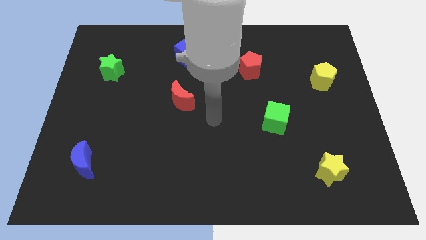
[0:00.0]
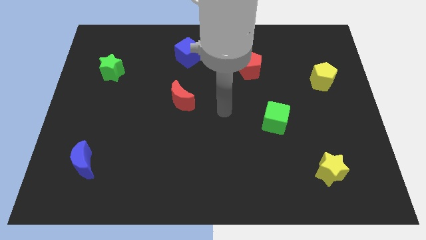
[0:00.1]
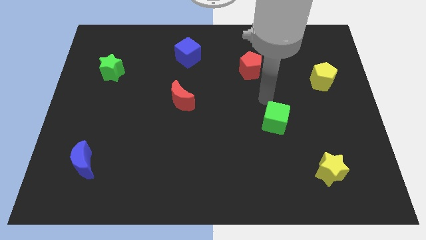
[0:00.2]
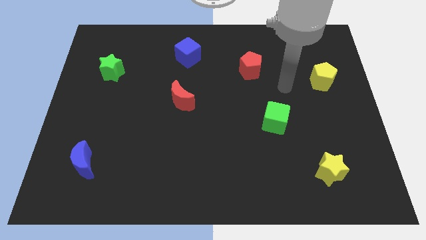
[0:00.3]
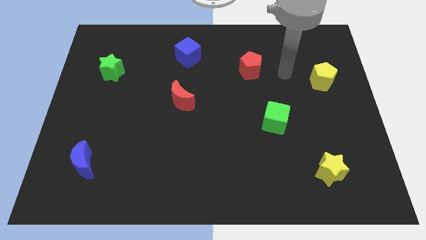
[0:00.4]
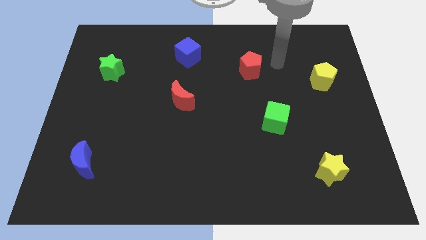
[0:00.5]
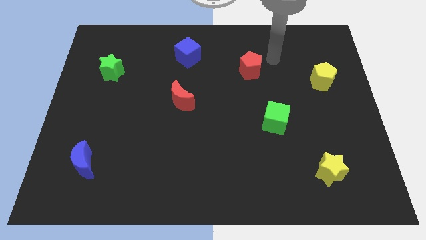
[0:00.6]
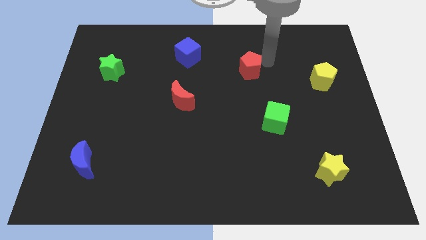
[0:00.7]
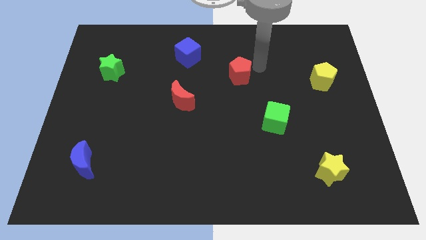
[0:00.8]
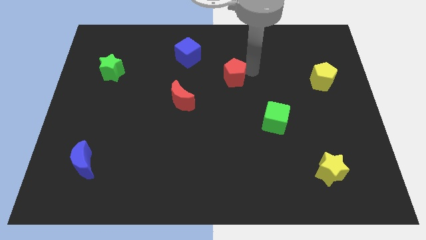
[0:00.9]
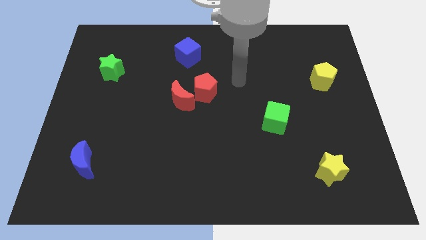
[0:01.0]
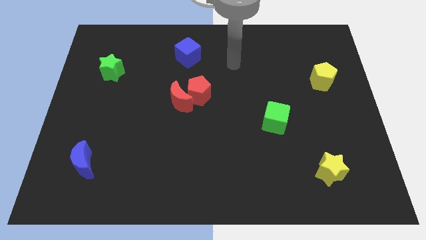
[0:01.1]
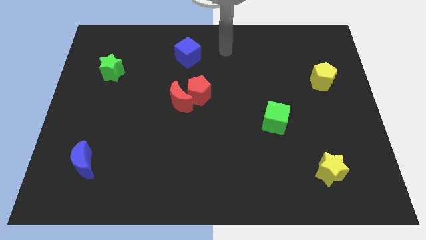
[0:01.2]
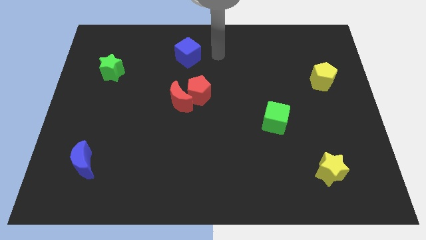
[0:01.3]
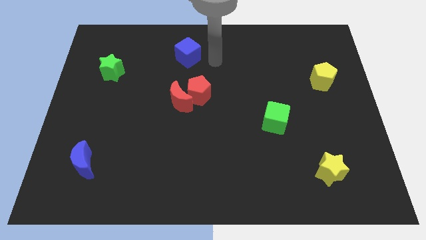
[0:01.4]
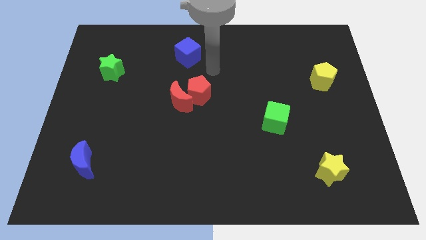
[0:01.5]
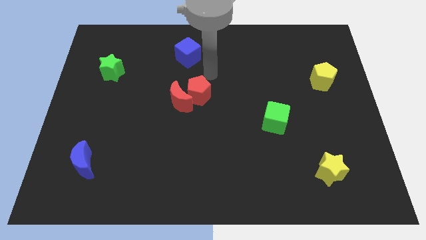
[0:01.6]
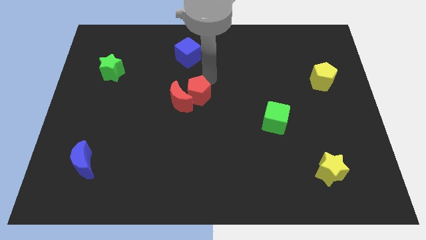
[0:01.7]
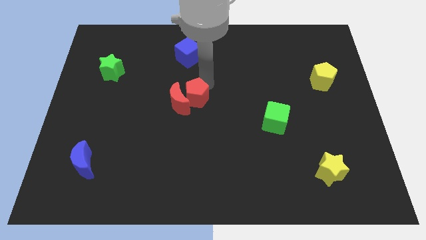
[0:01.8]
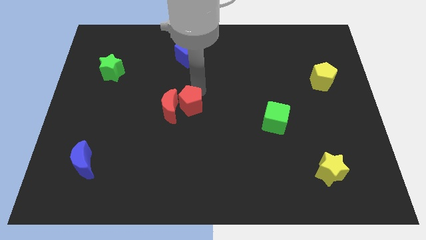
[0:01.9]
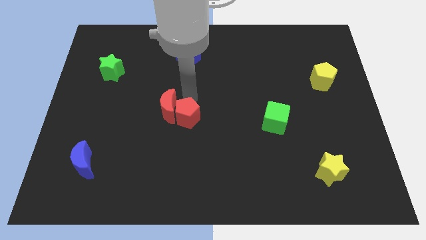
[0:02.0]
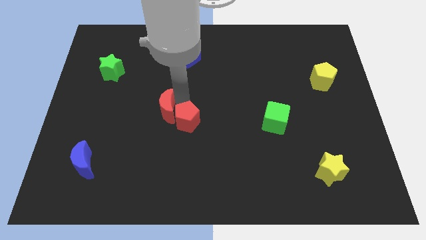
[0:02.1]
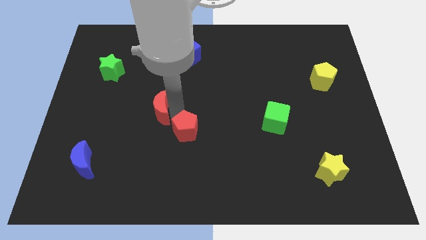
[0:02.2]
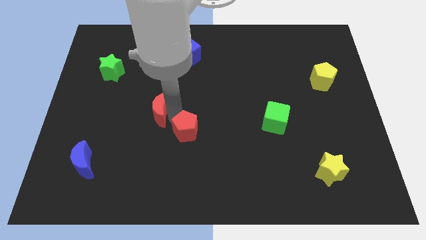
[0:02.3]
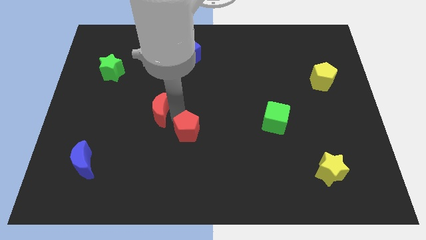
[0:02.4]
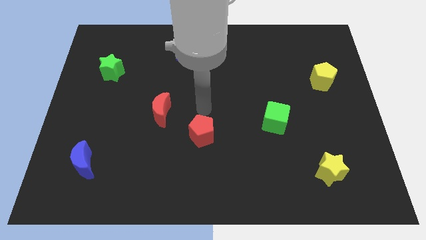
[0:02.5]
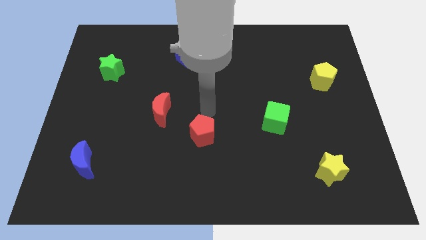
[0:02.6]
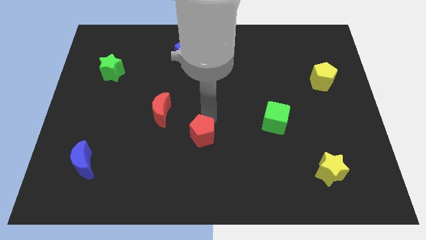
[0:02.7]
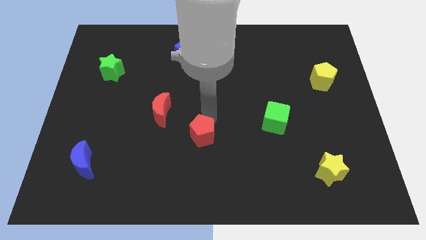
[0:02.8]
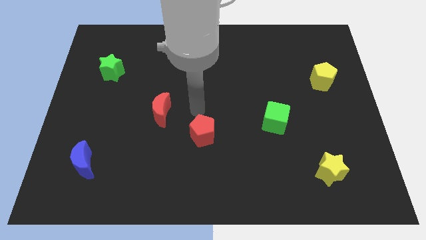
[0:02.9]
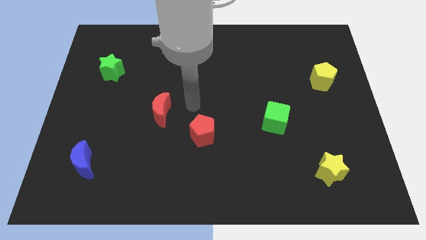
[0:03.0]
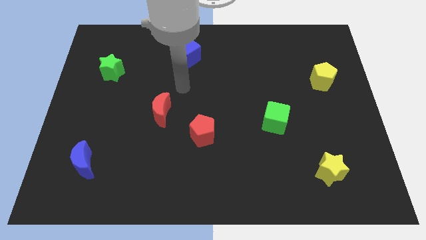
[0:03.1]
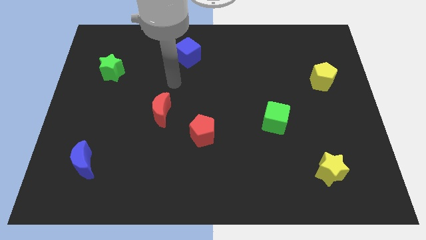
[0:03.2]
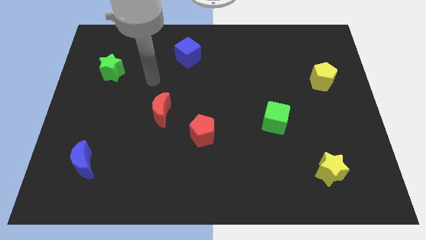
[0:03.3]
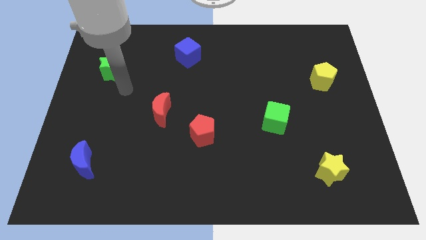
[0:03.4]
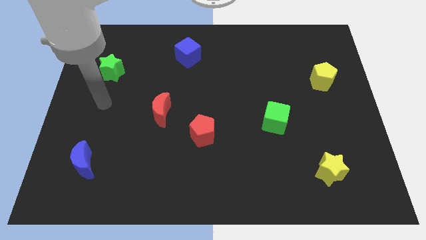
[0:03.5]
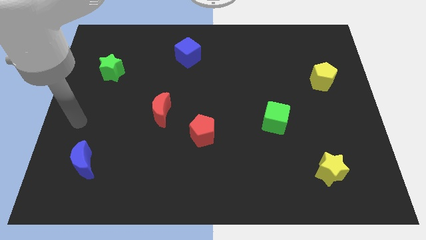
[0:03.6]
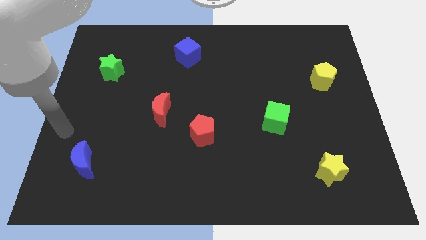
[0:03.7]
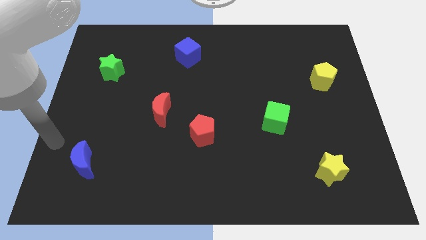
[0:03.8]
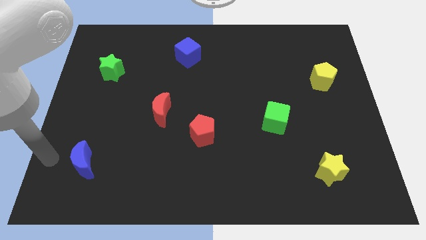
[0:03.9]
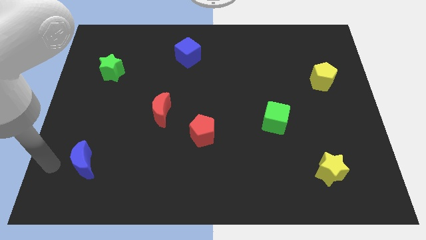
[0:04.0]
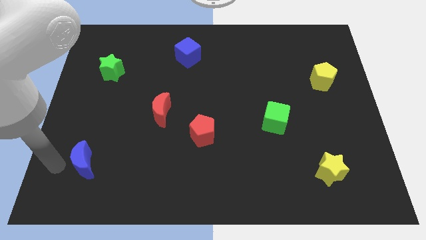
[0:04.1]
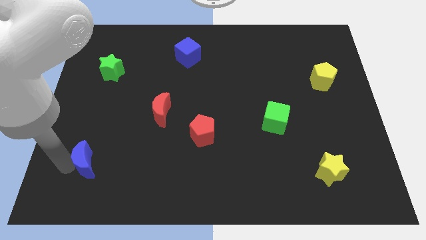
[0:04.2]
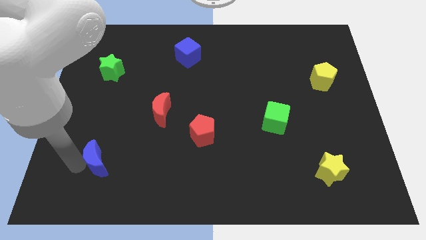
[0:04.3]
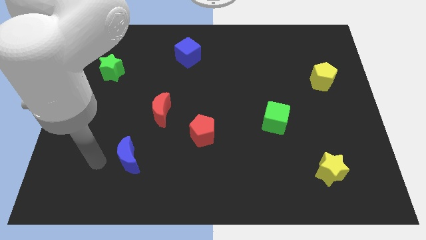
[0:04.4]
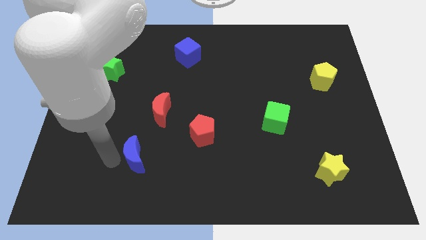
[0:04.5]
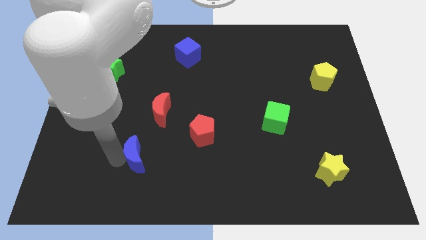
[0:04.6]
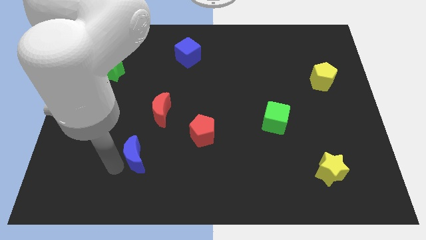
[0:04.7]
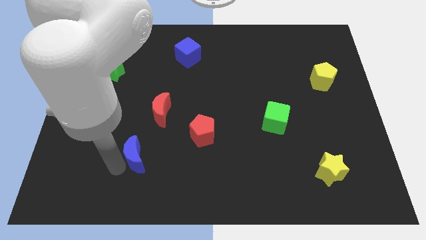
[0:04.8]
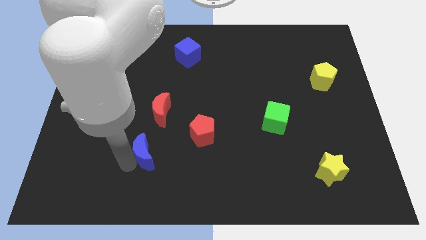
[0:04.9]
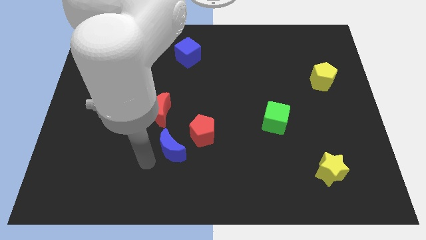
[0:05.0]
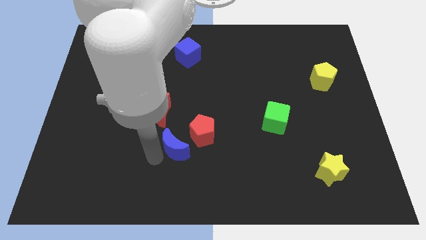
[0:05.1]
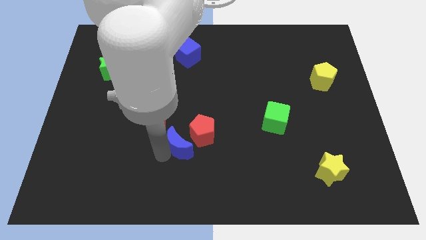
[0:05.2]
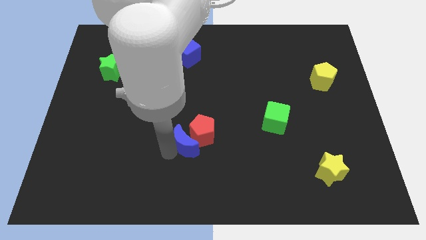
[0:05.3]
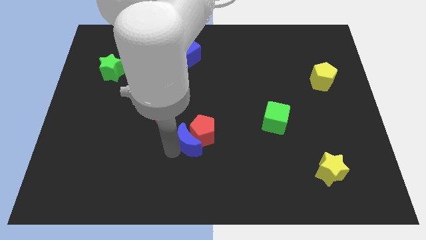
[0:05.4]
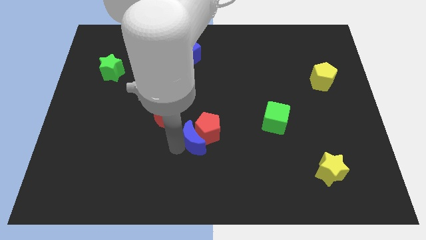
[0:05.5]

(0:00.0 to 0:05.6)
push the blue moon towards the red pentagon

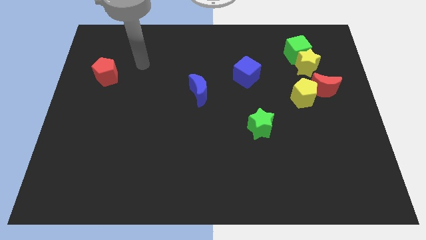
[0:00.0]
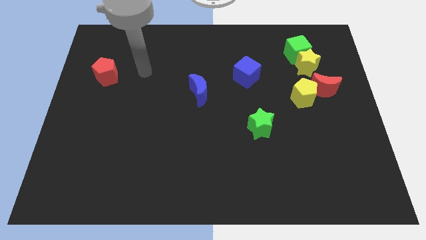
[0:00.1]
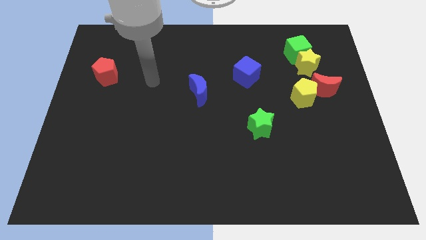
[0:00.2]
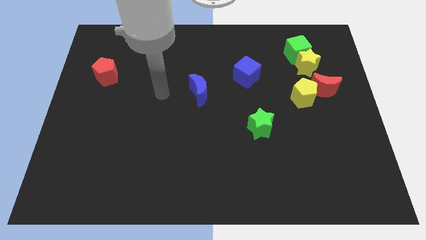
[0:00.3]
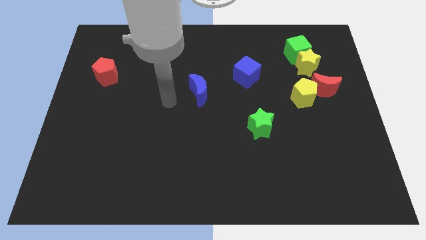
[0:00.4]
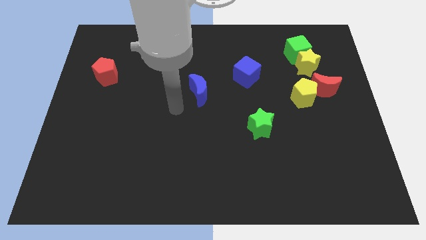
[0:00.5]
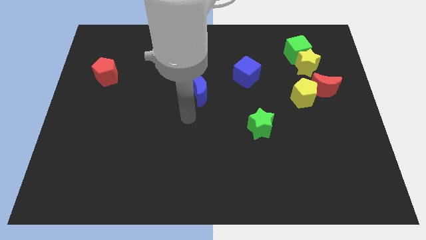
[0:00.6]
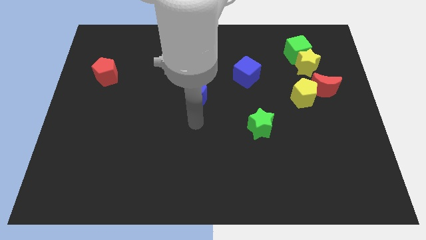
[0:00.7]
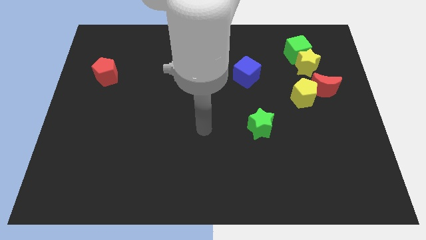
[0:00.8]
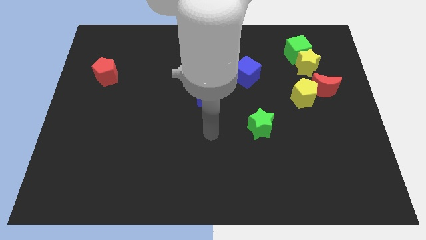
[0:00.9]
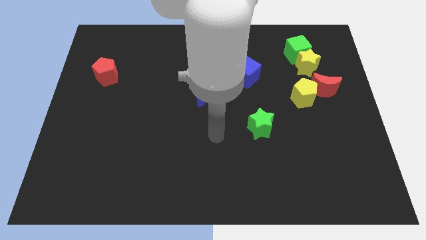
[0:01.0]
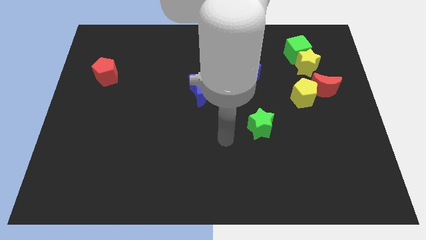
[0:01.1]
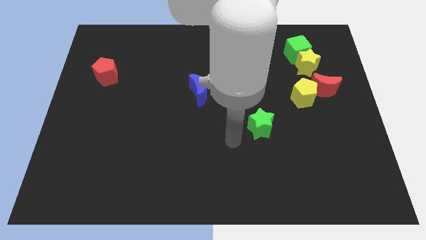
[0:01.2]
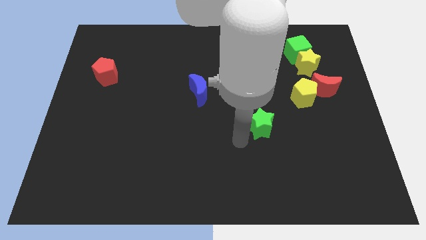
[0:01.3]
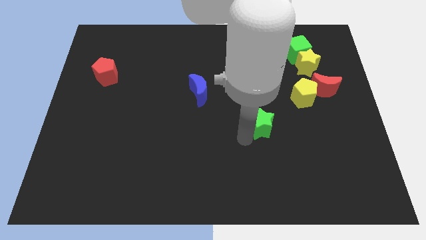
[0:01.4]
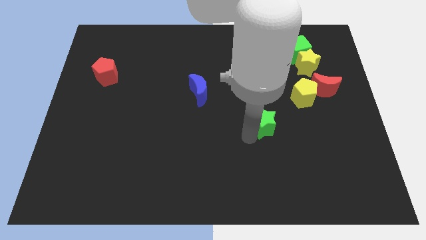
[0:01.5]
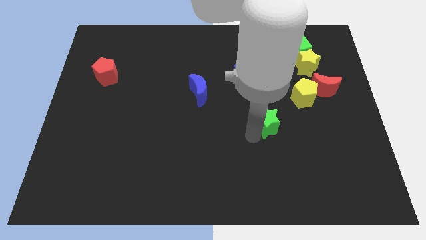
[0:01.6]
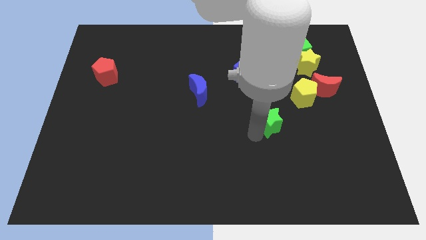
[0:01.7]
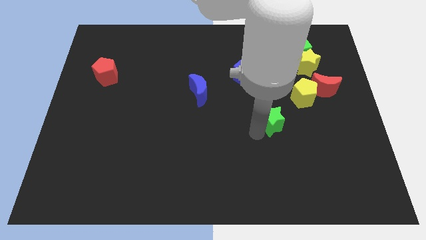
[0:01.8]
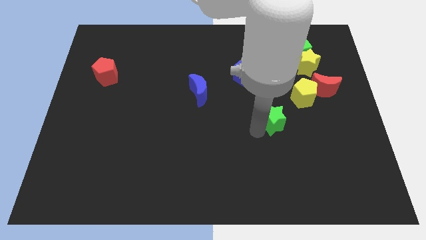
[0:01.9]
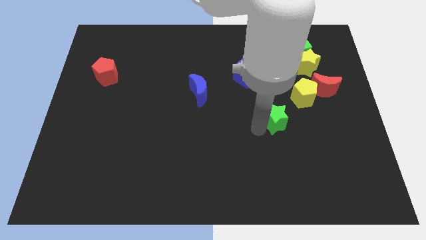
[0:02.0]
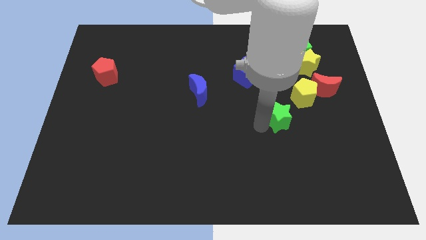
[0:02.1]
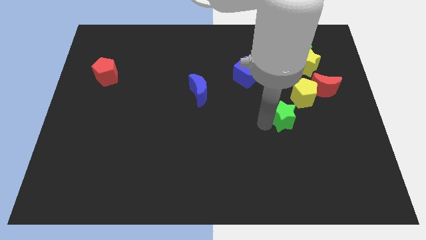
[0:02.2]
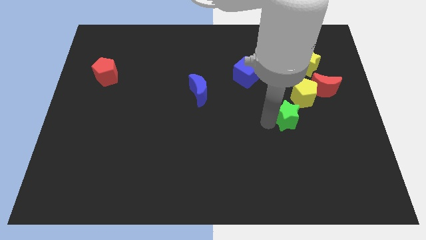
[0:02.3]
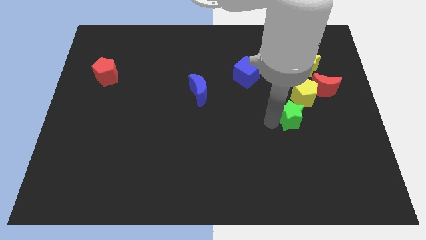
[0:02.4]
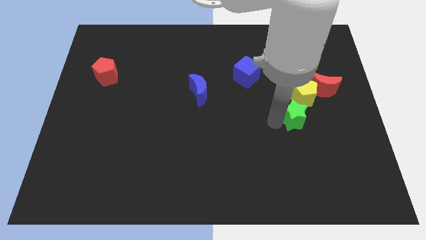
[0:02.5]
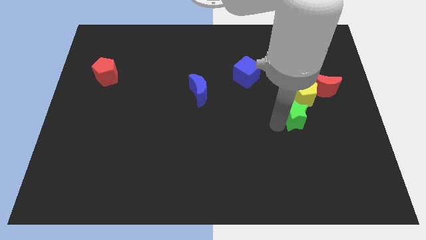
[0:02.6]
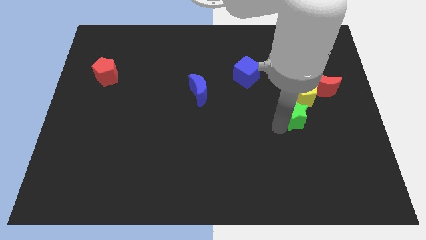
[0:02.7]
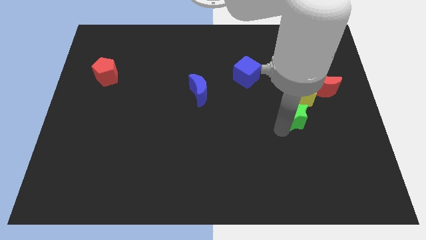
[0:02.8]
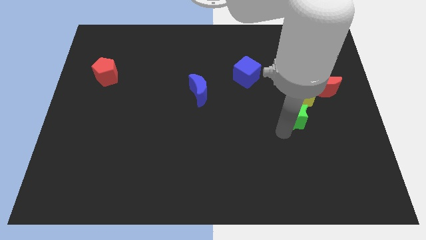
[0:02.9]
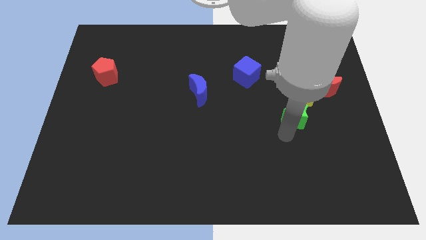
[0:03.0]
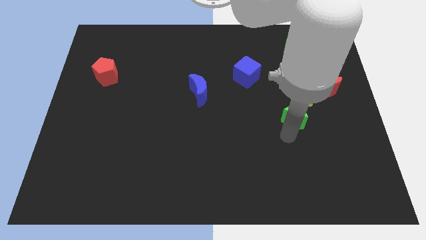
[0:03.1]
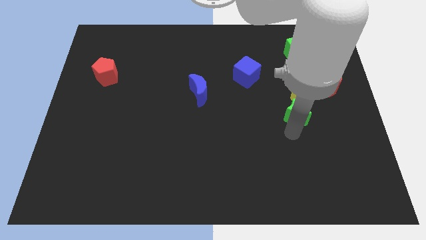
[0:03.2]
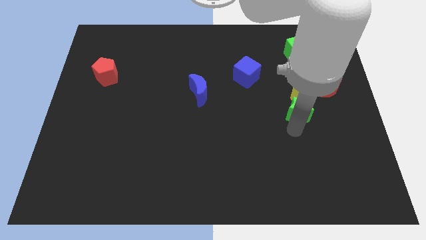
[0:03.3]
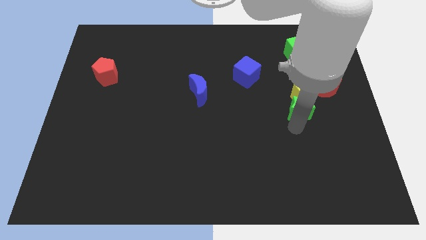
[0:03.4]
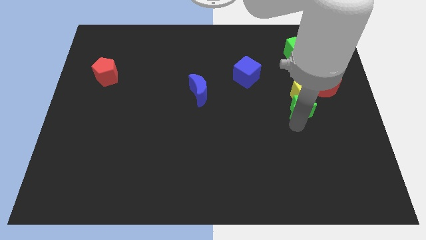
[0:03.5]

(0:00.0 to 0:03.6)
put the green star to the yellow pentagon
